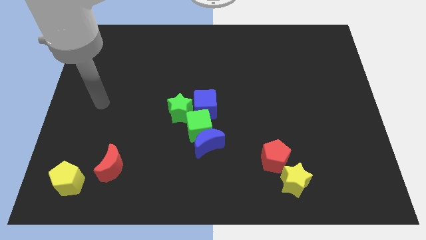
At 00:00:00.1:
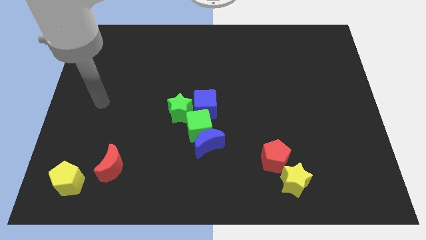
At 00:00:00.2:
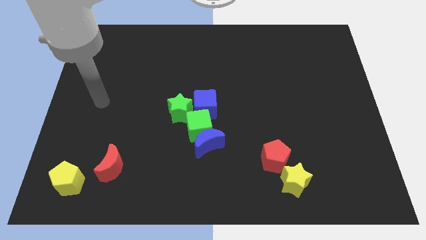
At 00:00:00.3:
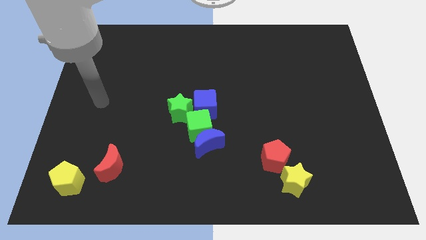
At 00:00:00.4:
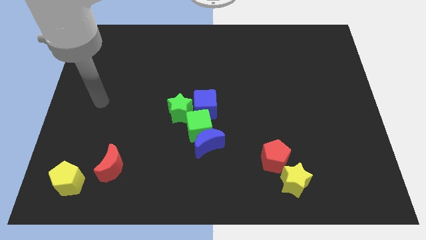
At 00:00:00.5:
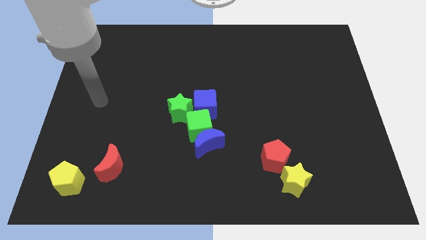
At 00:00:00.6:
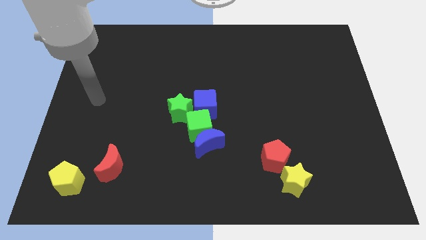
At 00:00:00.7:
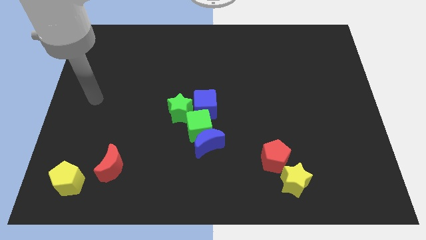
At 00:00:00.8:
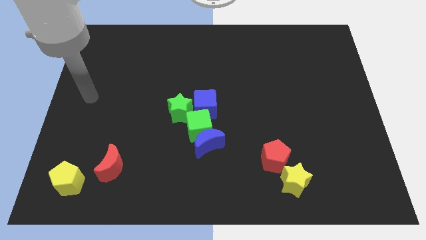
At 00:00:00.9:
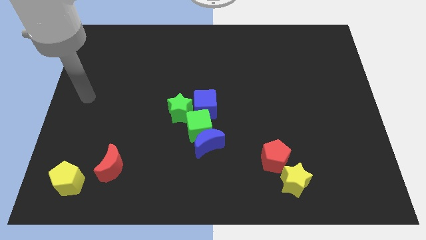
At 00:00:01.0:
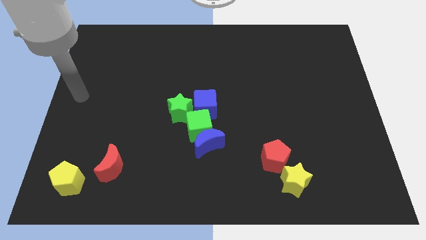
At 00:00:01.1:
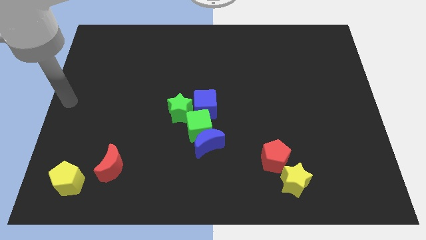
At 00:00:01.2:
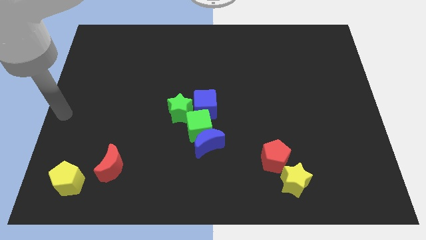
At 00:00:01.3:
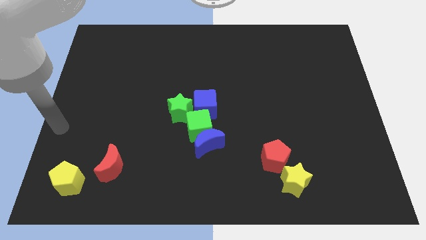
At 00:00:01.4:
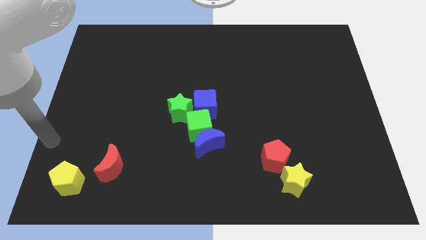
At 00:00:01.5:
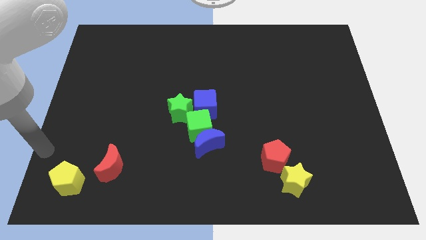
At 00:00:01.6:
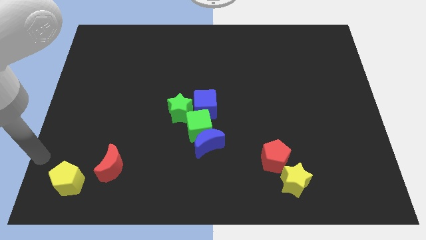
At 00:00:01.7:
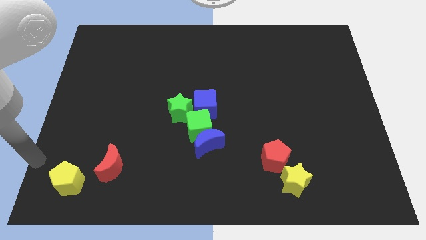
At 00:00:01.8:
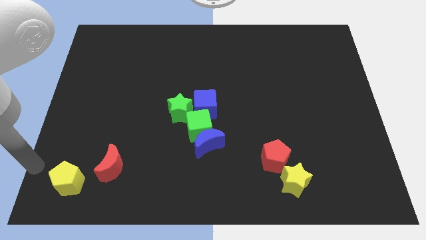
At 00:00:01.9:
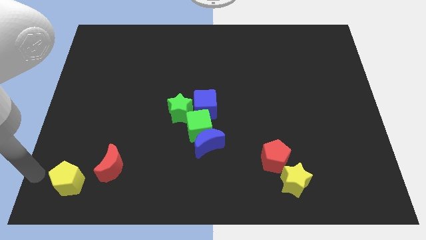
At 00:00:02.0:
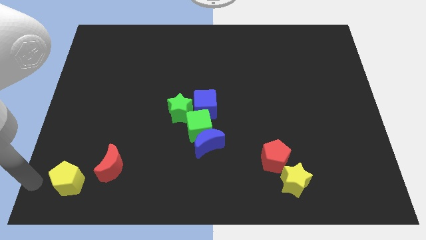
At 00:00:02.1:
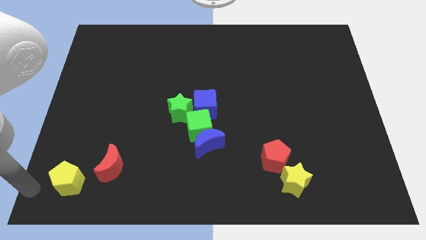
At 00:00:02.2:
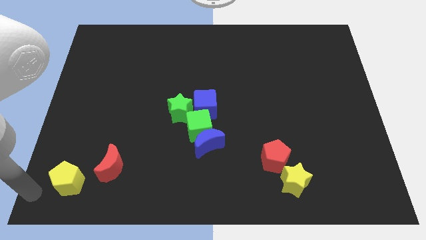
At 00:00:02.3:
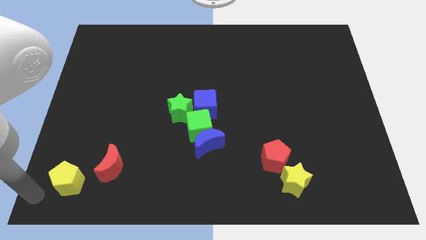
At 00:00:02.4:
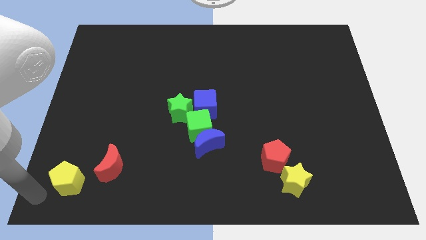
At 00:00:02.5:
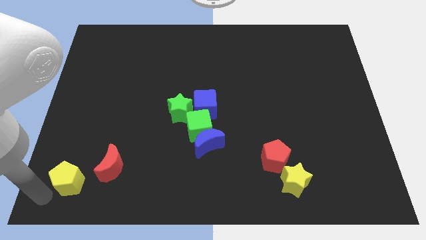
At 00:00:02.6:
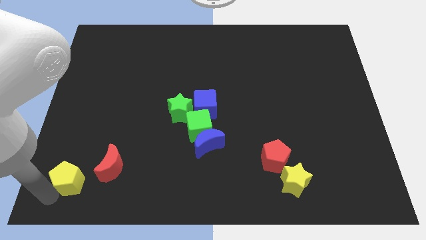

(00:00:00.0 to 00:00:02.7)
place your arm to the bottom left of yellow pentagon

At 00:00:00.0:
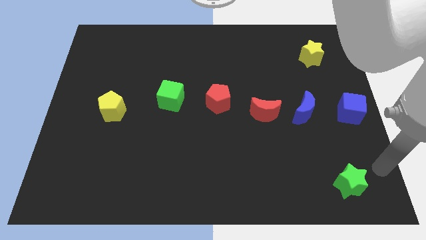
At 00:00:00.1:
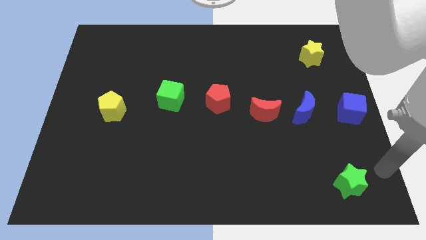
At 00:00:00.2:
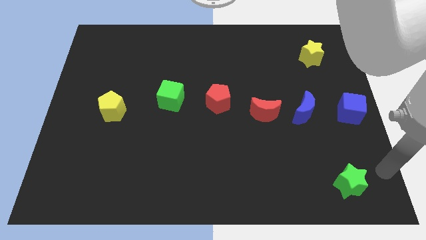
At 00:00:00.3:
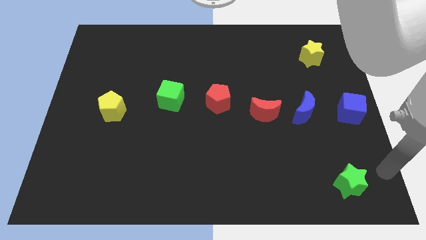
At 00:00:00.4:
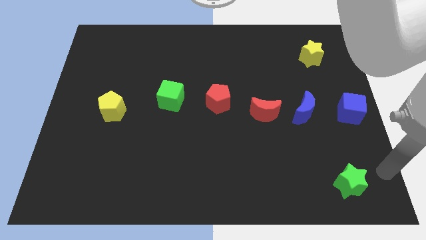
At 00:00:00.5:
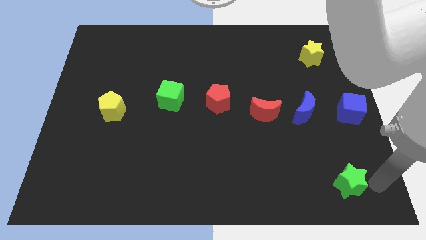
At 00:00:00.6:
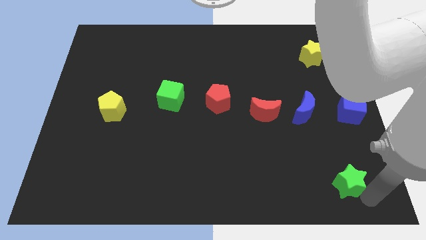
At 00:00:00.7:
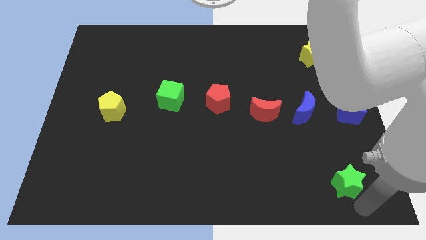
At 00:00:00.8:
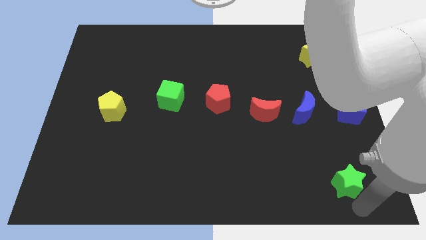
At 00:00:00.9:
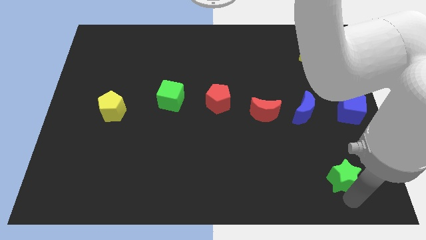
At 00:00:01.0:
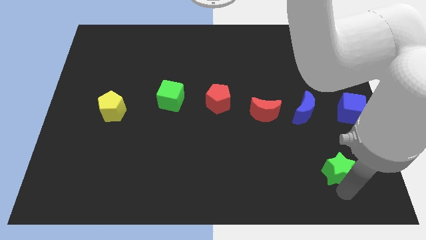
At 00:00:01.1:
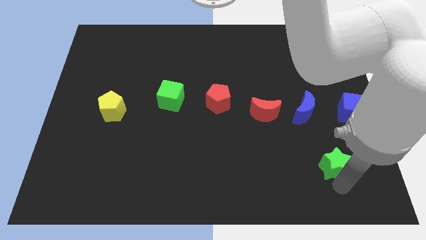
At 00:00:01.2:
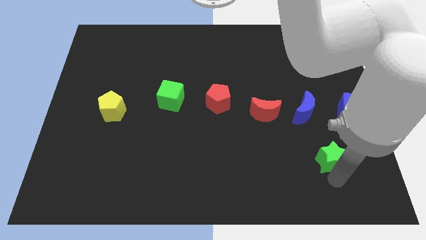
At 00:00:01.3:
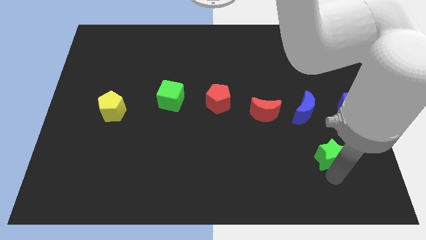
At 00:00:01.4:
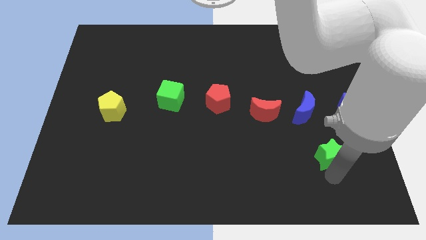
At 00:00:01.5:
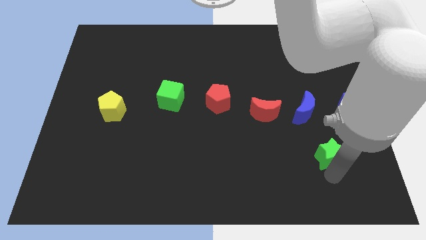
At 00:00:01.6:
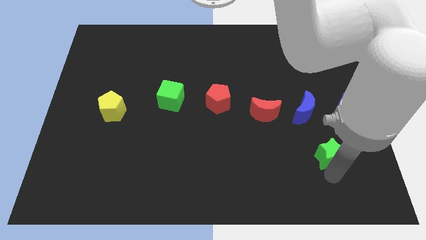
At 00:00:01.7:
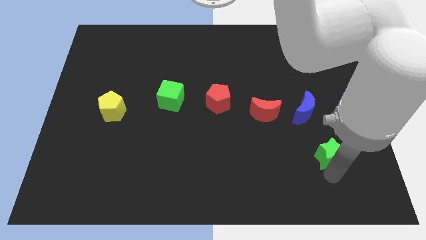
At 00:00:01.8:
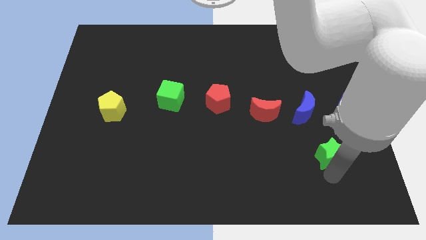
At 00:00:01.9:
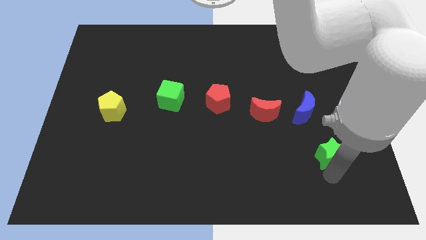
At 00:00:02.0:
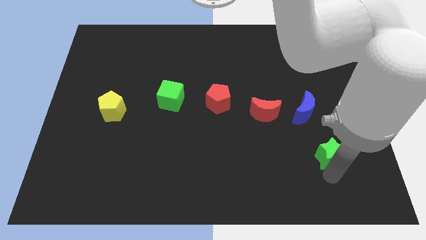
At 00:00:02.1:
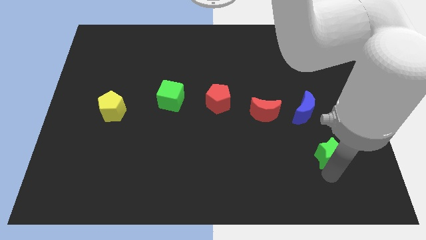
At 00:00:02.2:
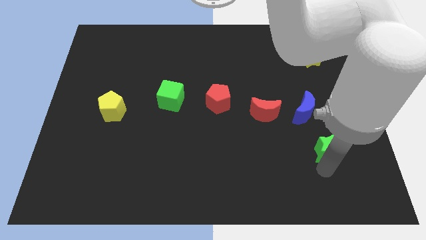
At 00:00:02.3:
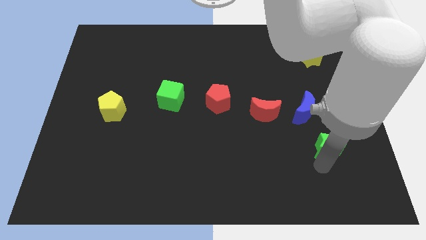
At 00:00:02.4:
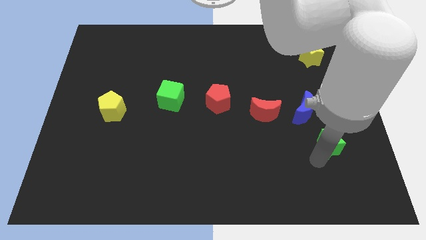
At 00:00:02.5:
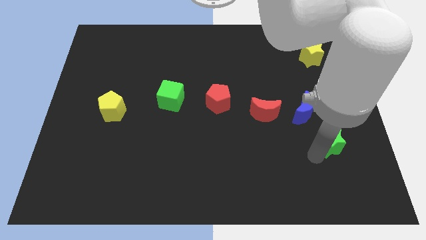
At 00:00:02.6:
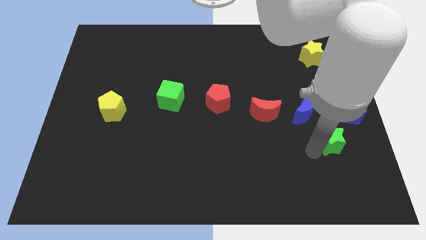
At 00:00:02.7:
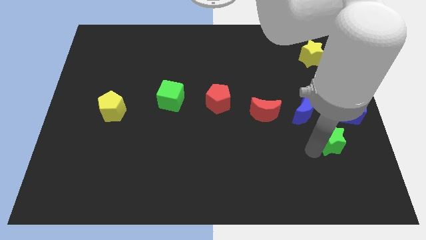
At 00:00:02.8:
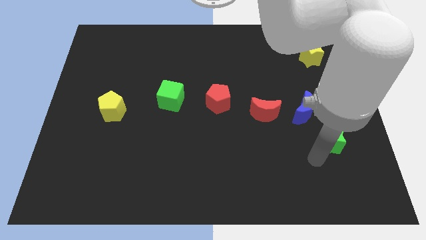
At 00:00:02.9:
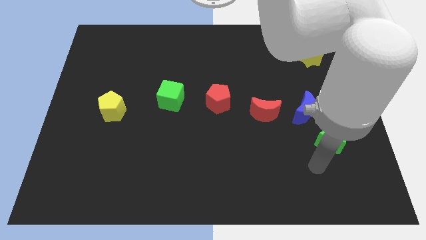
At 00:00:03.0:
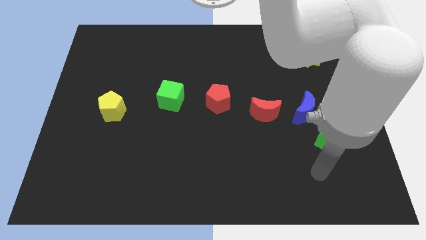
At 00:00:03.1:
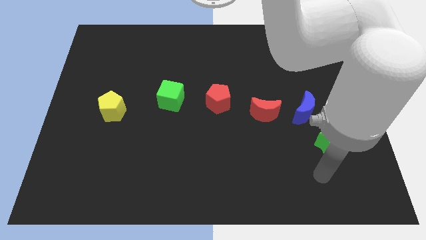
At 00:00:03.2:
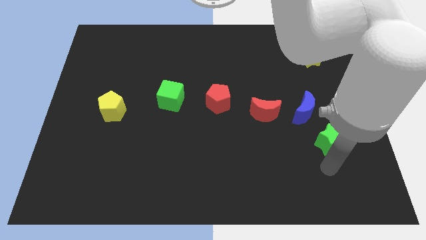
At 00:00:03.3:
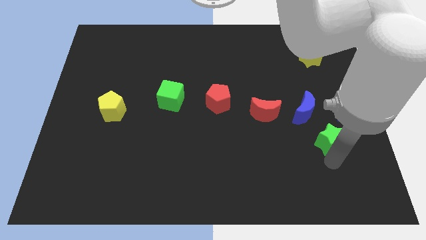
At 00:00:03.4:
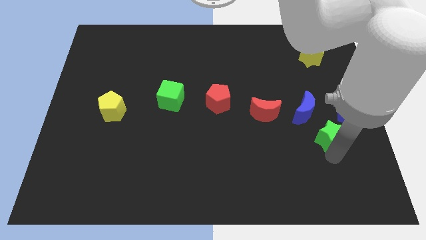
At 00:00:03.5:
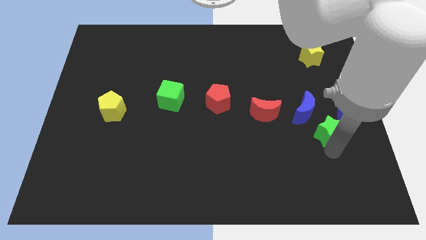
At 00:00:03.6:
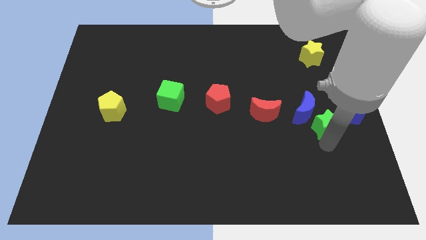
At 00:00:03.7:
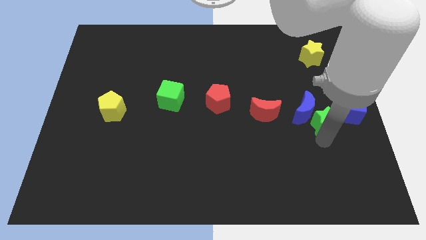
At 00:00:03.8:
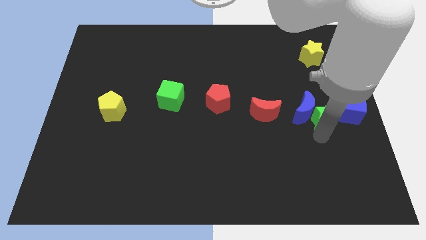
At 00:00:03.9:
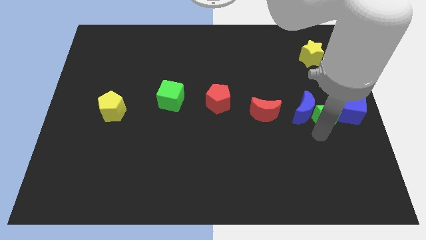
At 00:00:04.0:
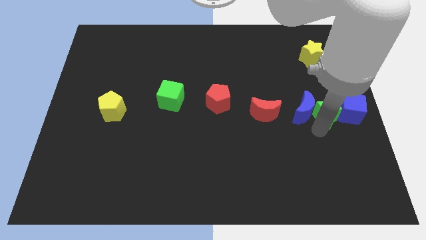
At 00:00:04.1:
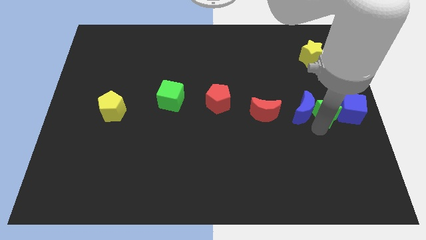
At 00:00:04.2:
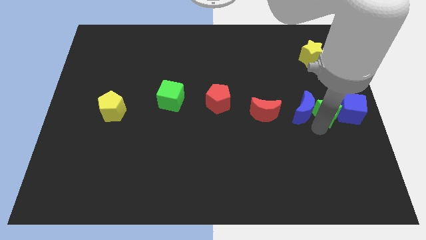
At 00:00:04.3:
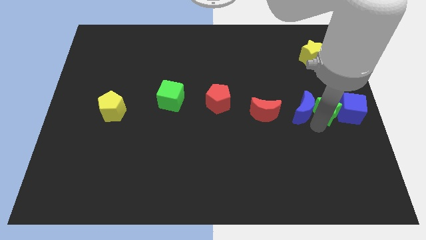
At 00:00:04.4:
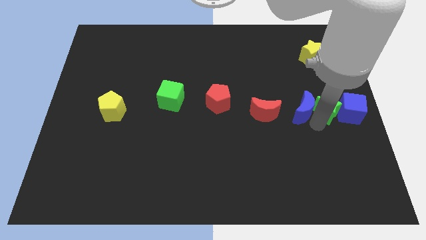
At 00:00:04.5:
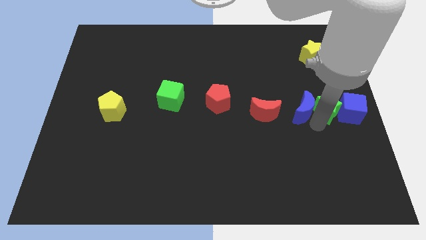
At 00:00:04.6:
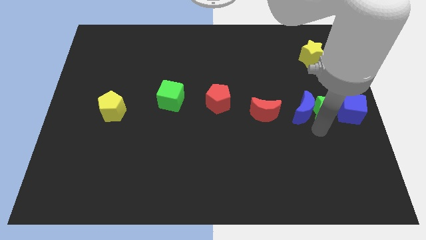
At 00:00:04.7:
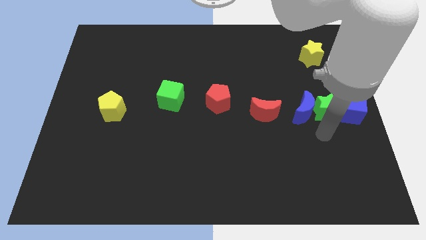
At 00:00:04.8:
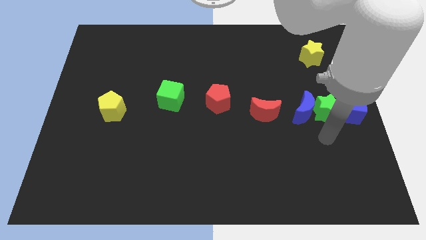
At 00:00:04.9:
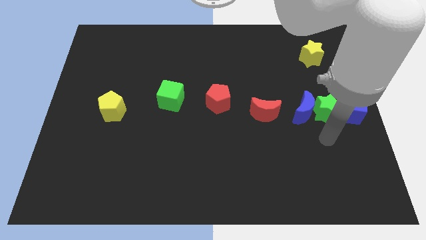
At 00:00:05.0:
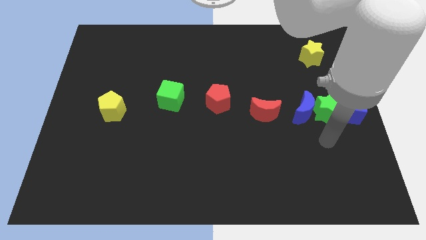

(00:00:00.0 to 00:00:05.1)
place green star in between blue blocks

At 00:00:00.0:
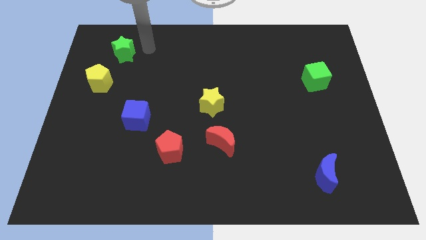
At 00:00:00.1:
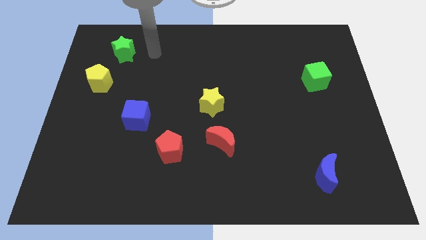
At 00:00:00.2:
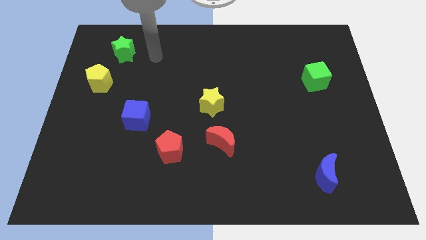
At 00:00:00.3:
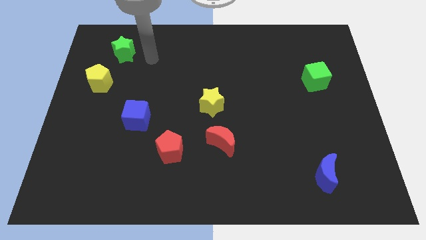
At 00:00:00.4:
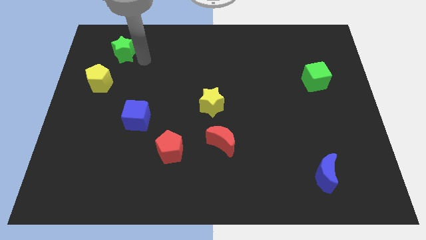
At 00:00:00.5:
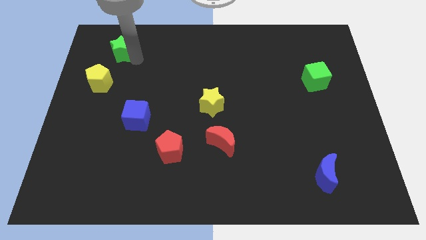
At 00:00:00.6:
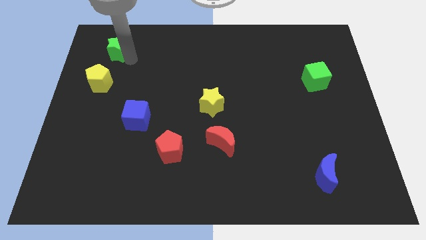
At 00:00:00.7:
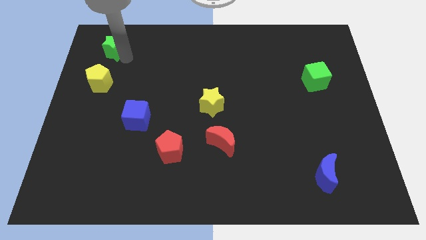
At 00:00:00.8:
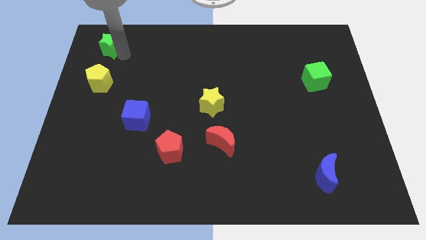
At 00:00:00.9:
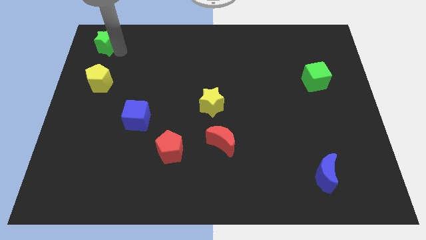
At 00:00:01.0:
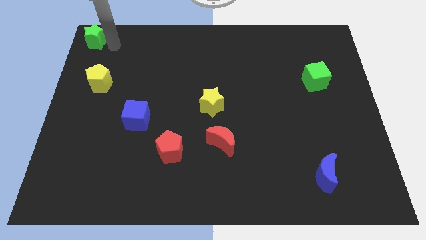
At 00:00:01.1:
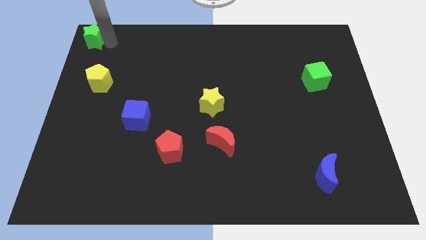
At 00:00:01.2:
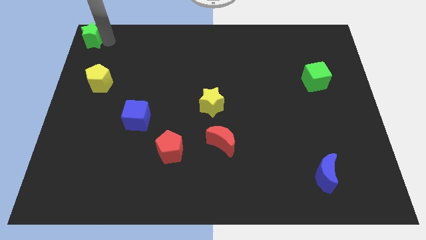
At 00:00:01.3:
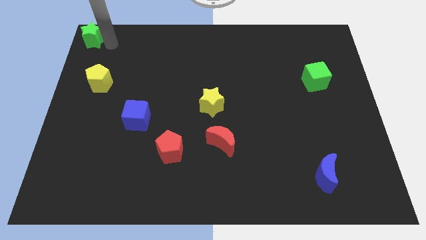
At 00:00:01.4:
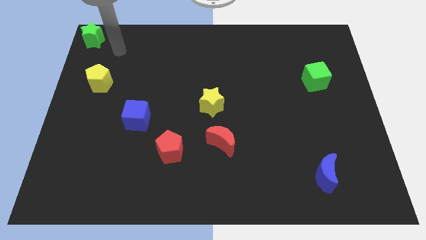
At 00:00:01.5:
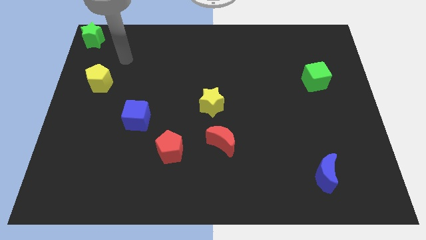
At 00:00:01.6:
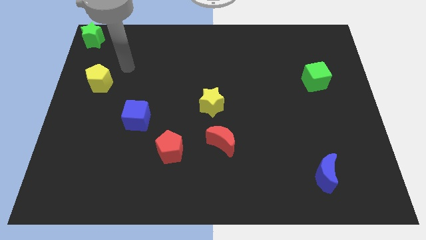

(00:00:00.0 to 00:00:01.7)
place the green star on left top corner of the board
